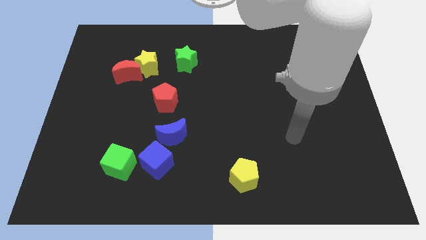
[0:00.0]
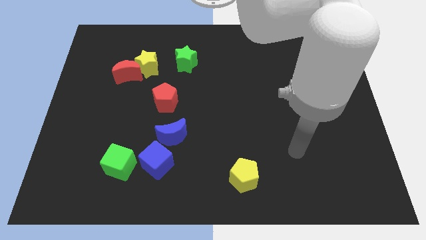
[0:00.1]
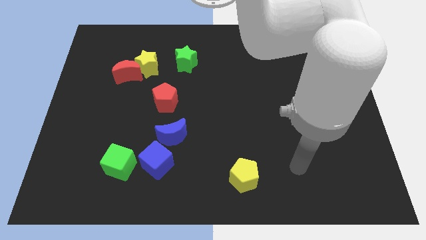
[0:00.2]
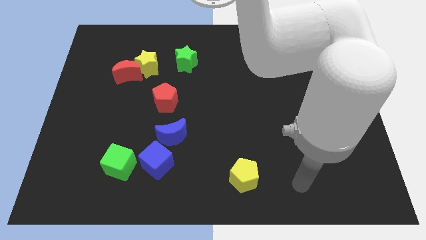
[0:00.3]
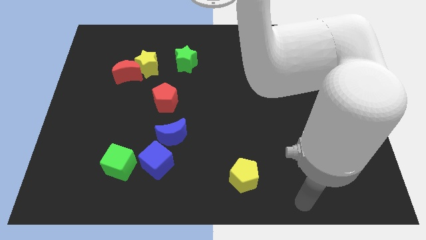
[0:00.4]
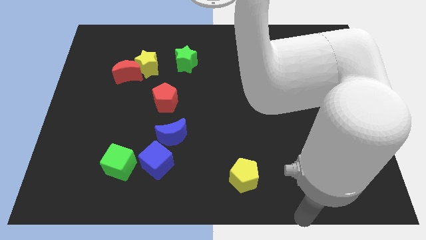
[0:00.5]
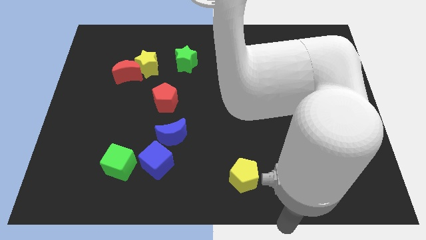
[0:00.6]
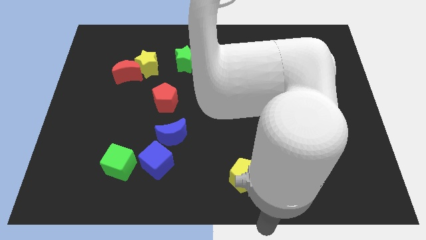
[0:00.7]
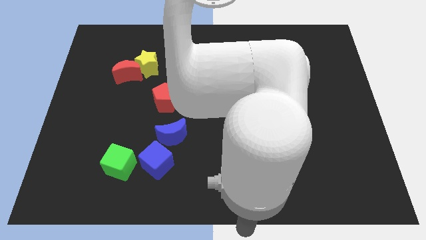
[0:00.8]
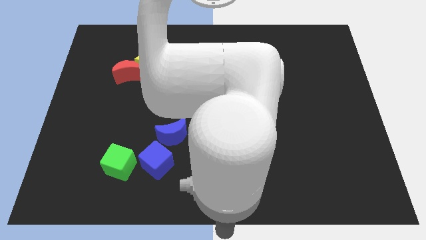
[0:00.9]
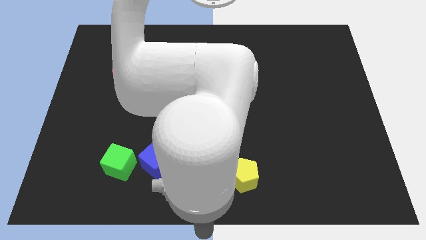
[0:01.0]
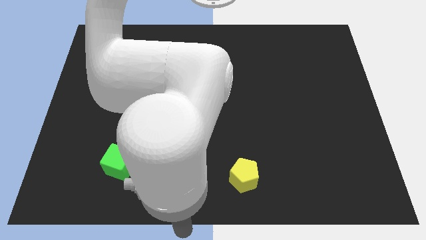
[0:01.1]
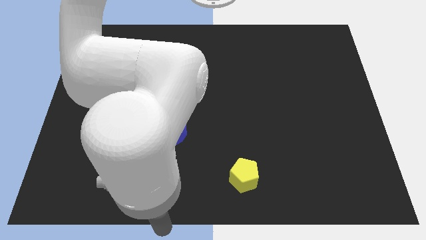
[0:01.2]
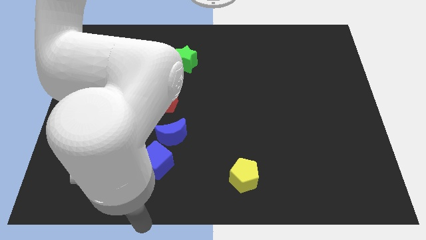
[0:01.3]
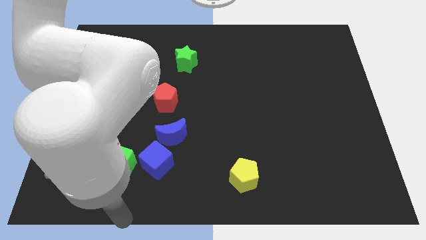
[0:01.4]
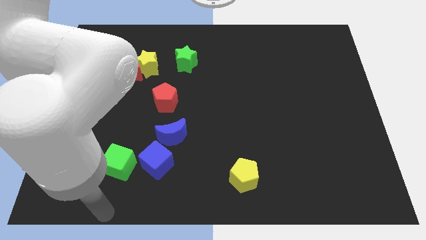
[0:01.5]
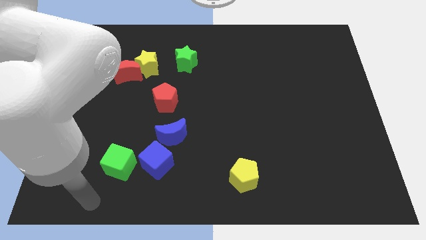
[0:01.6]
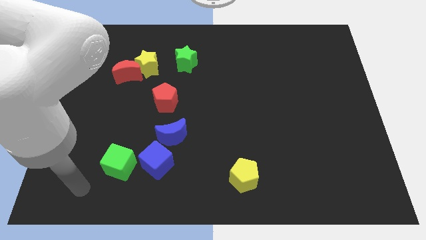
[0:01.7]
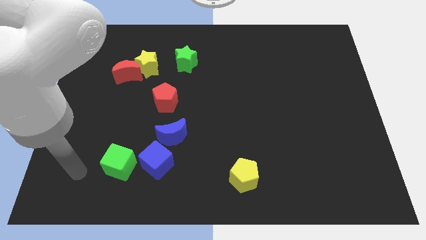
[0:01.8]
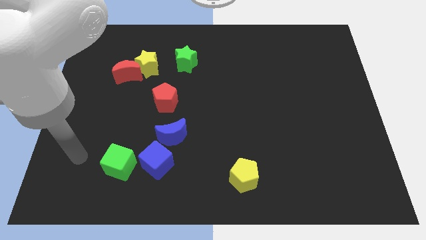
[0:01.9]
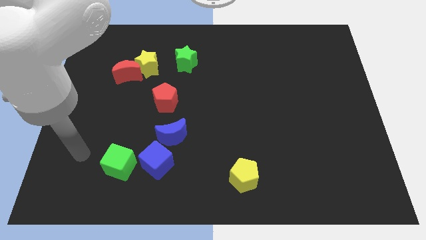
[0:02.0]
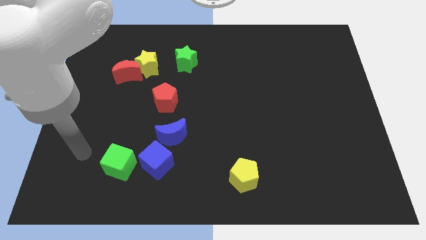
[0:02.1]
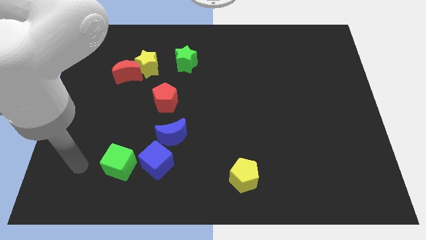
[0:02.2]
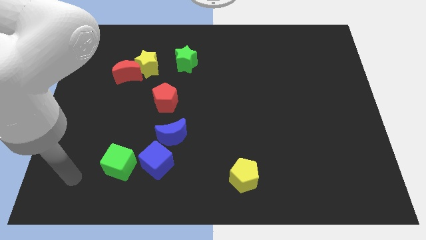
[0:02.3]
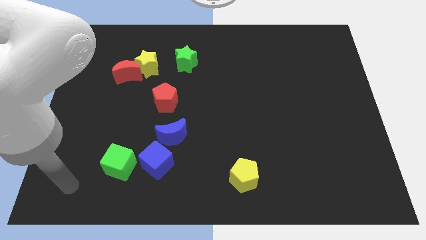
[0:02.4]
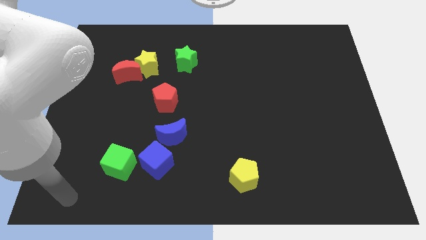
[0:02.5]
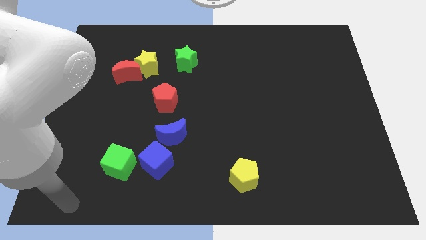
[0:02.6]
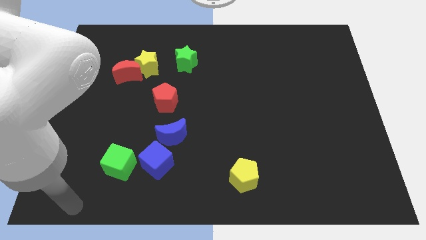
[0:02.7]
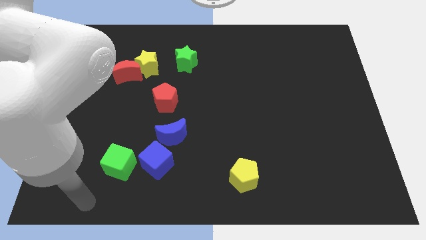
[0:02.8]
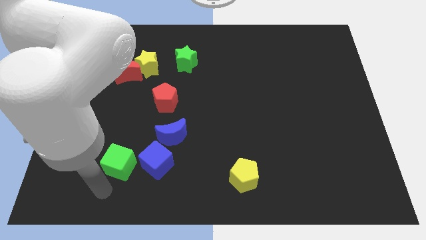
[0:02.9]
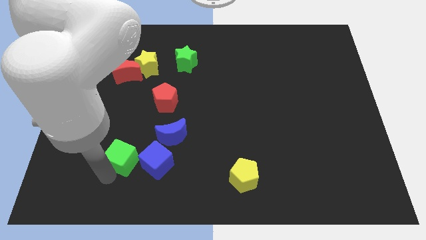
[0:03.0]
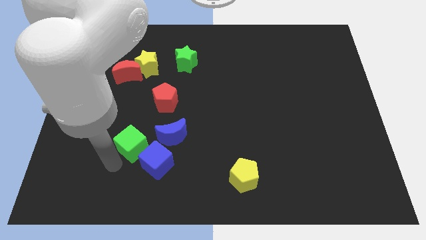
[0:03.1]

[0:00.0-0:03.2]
place your arm at the bottom of the green cube

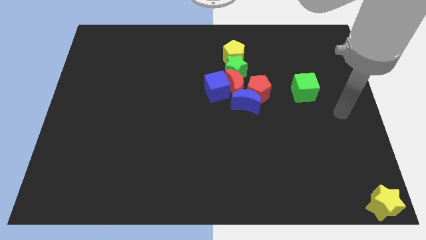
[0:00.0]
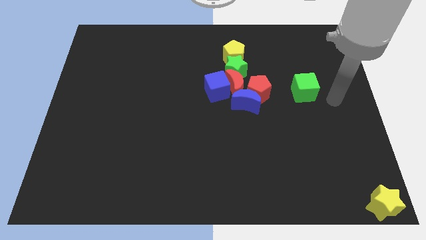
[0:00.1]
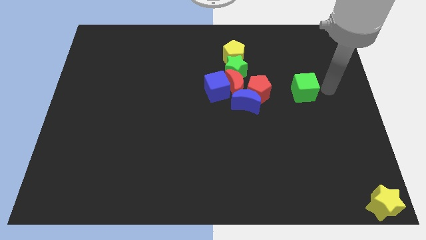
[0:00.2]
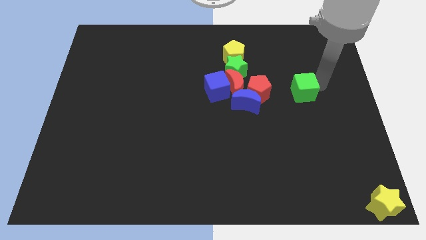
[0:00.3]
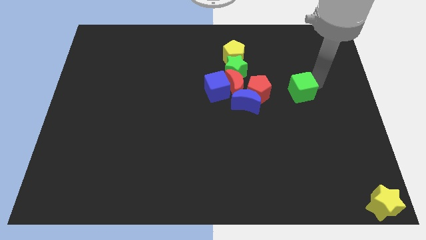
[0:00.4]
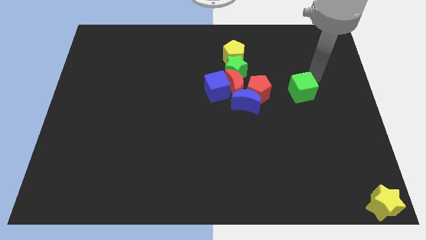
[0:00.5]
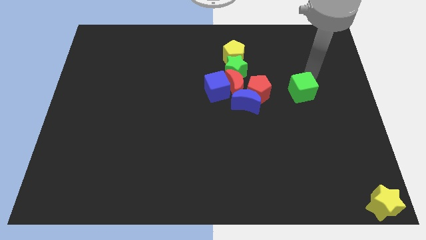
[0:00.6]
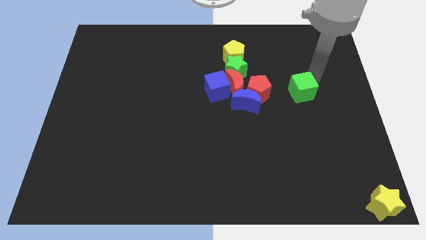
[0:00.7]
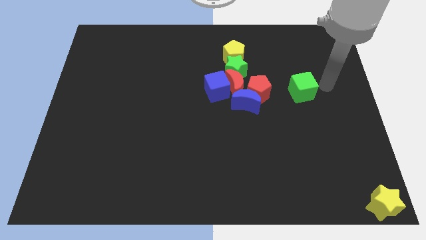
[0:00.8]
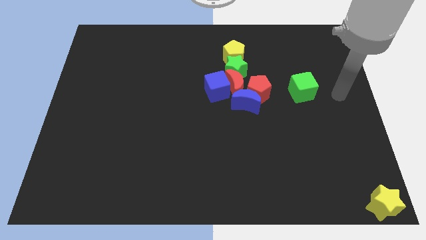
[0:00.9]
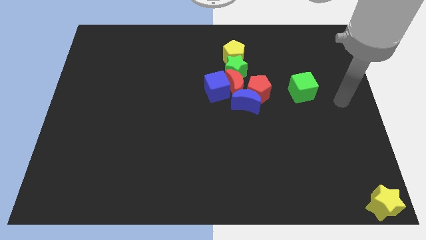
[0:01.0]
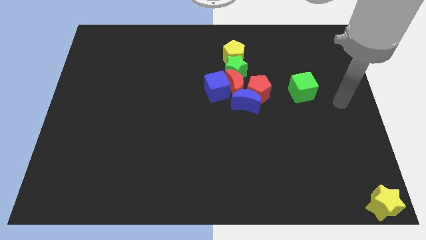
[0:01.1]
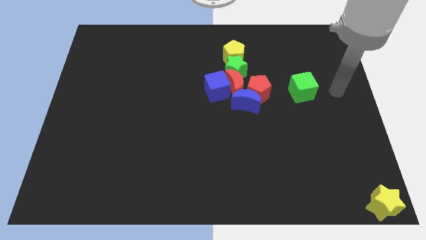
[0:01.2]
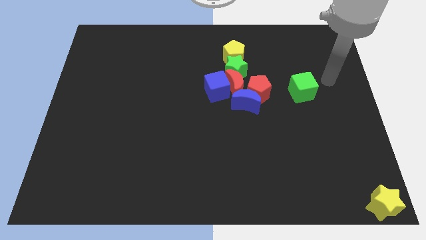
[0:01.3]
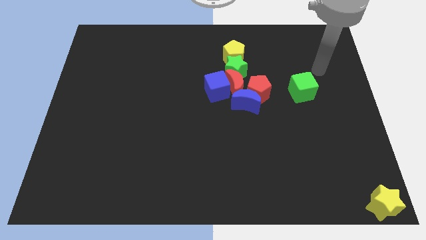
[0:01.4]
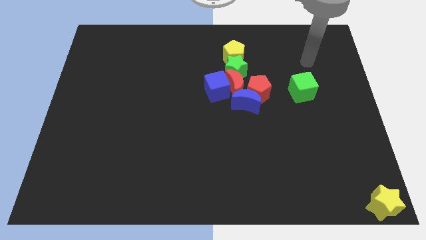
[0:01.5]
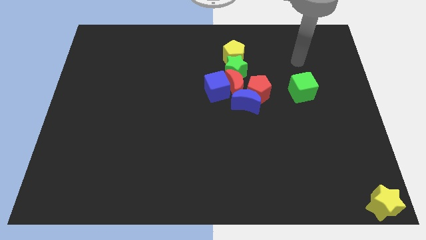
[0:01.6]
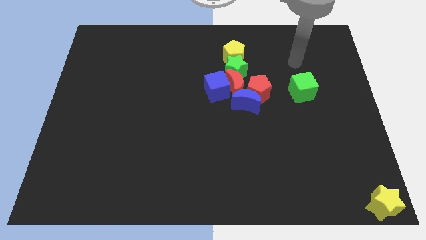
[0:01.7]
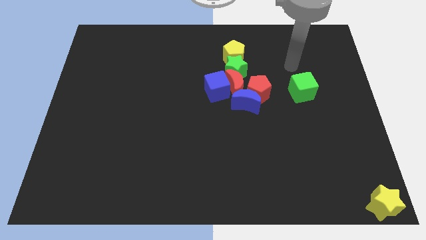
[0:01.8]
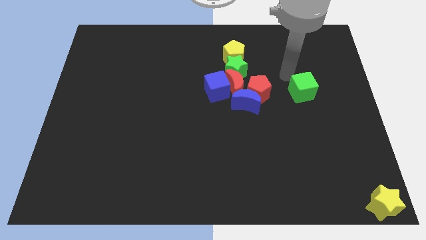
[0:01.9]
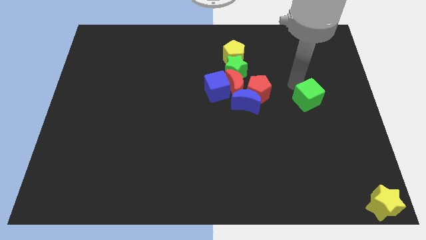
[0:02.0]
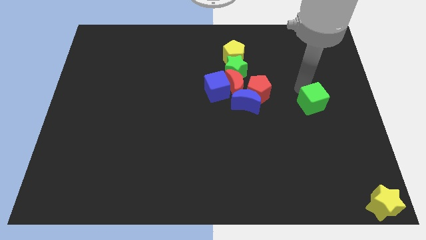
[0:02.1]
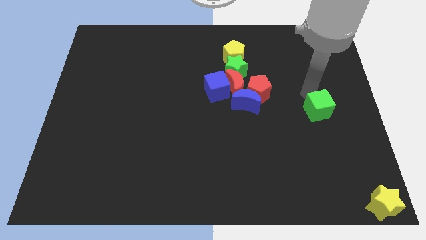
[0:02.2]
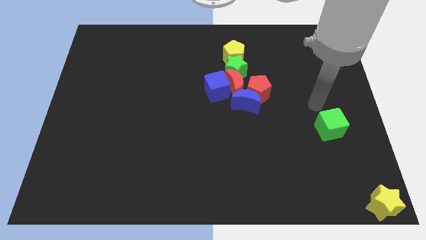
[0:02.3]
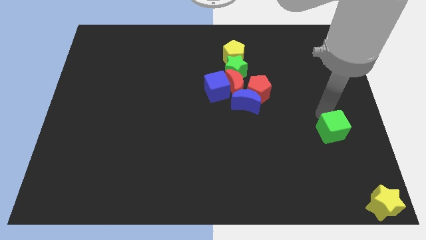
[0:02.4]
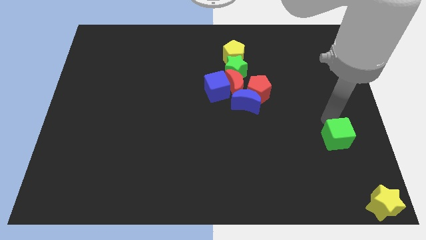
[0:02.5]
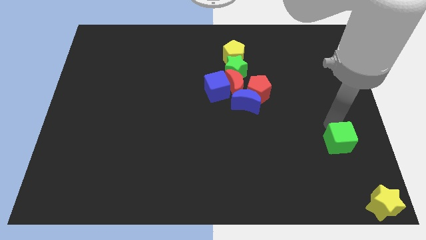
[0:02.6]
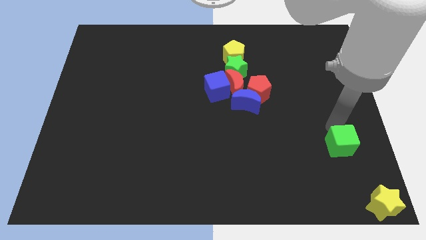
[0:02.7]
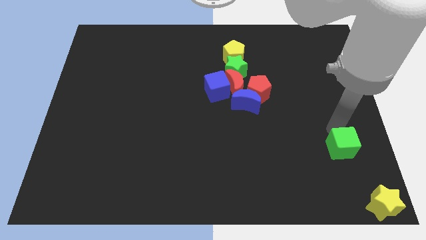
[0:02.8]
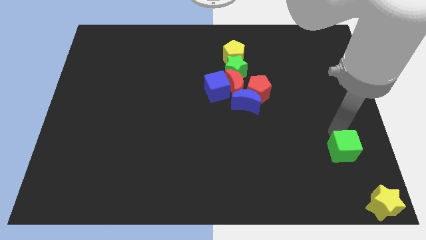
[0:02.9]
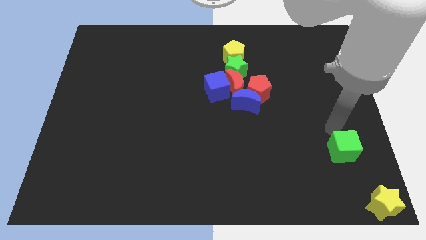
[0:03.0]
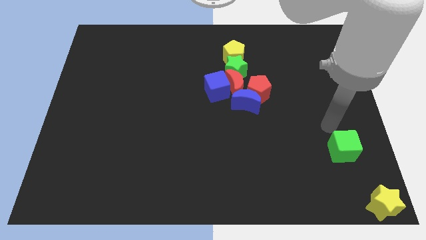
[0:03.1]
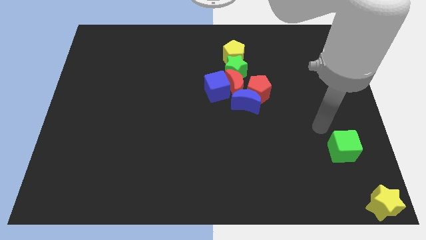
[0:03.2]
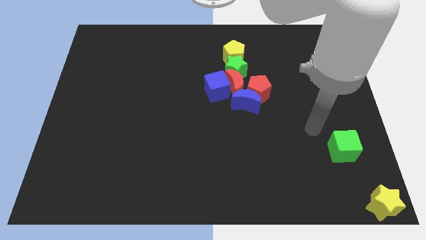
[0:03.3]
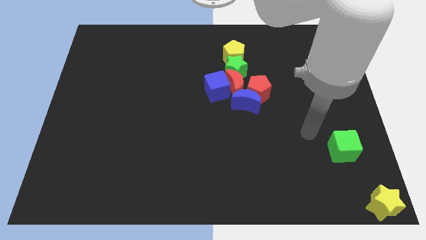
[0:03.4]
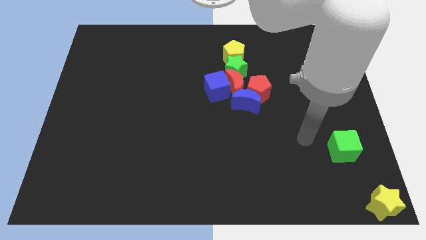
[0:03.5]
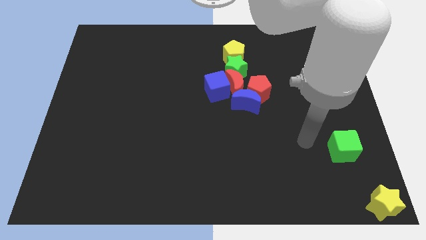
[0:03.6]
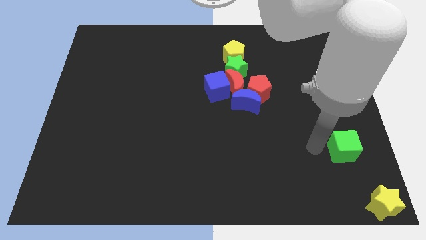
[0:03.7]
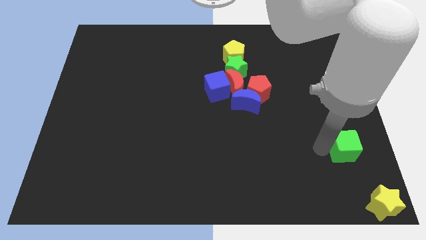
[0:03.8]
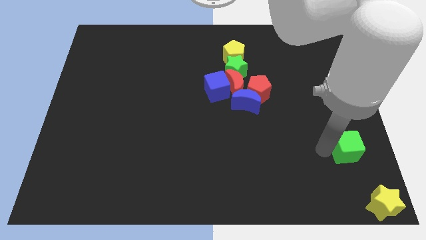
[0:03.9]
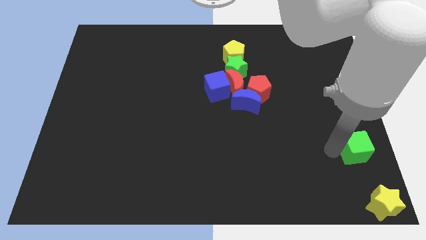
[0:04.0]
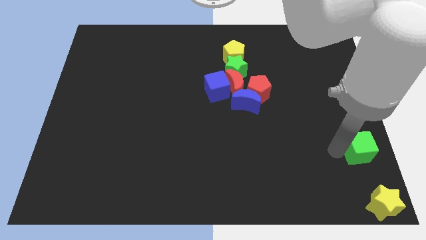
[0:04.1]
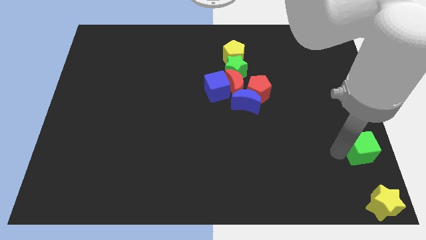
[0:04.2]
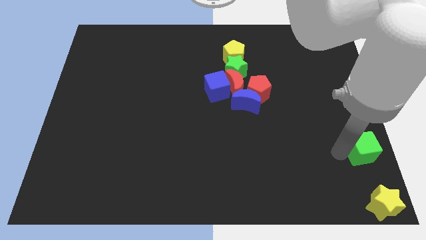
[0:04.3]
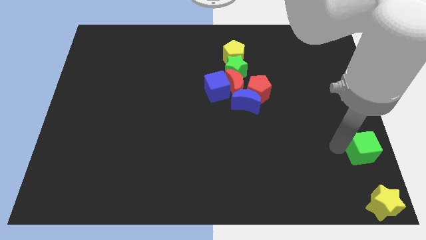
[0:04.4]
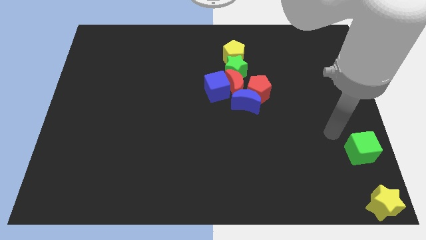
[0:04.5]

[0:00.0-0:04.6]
place the green cube on the top of the yellow star

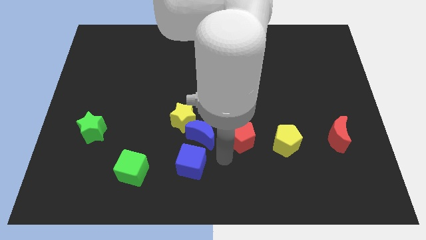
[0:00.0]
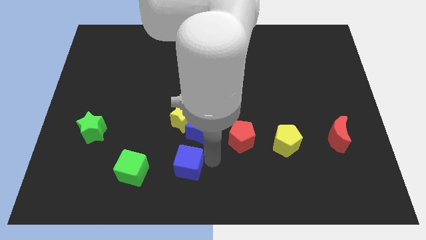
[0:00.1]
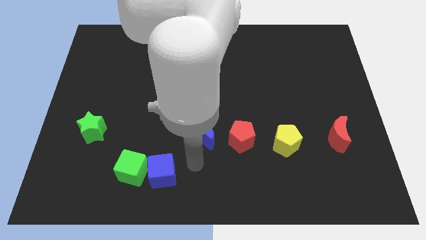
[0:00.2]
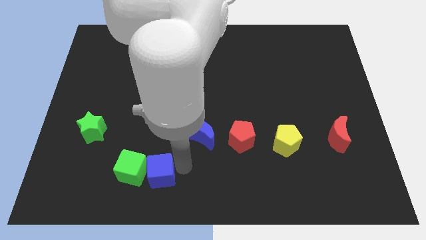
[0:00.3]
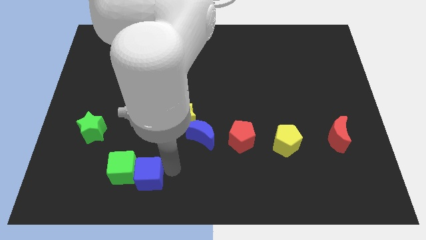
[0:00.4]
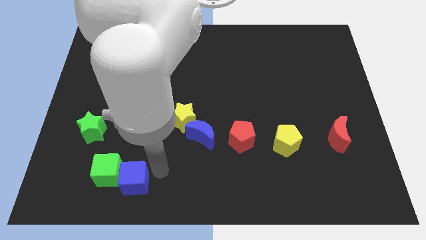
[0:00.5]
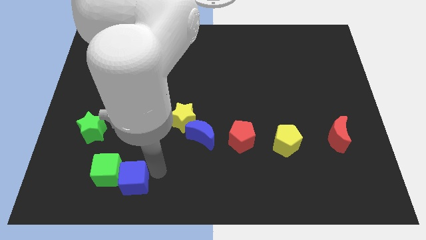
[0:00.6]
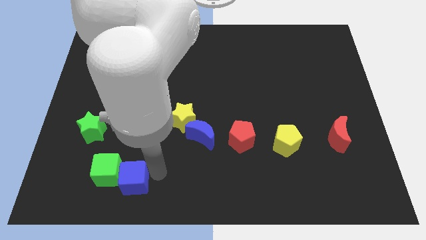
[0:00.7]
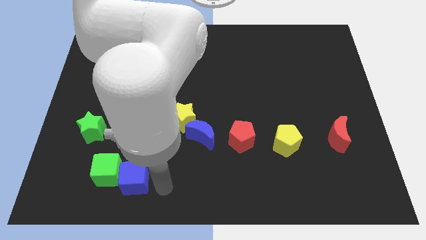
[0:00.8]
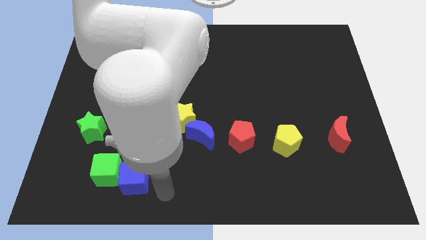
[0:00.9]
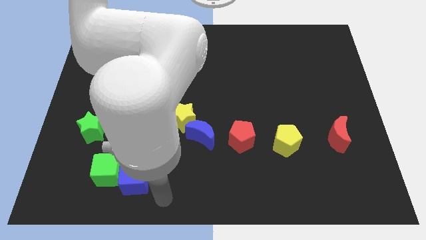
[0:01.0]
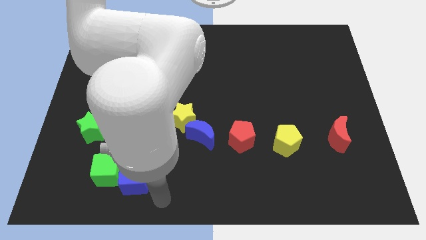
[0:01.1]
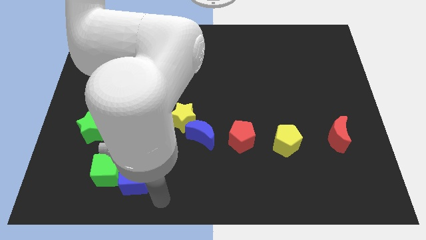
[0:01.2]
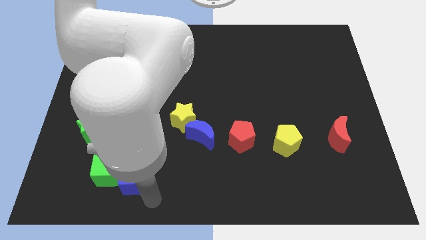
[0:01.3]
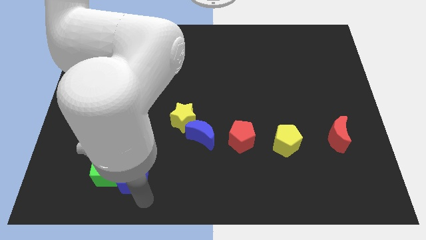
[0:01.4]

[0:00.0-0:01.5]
move blue cube into the green cube
